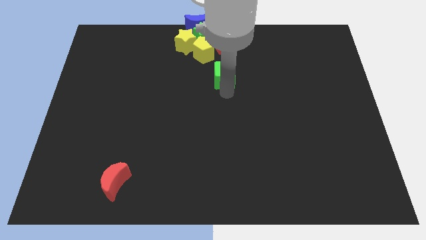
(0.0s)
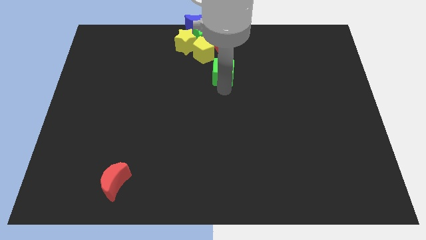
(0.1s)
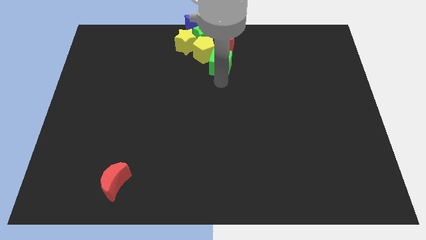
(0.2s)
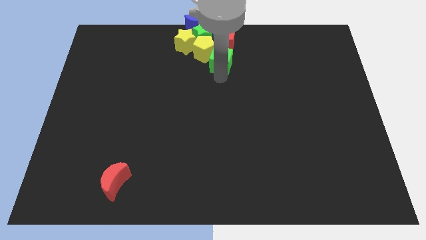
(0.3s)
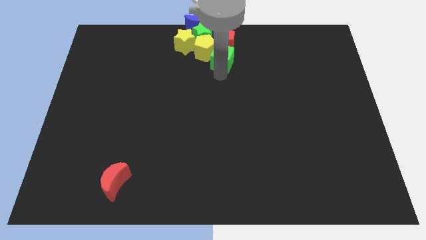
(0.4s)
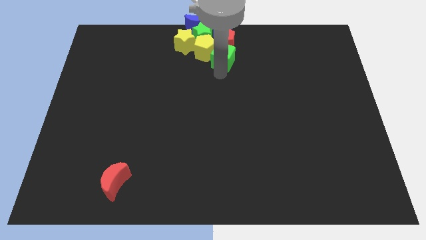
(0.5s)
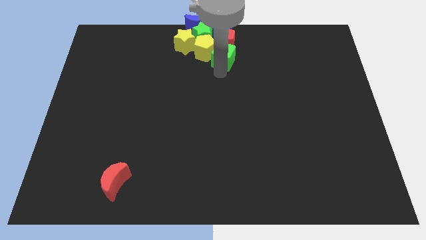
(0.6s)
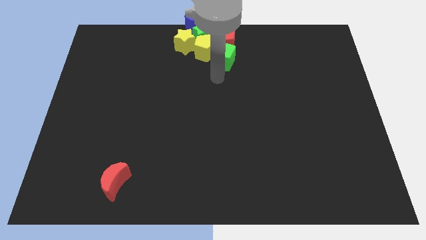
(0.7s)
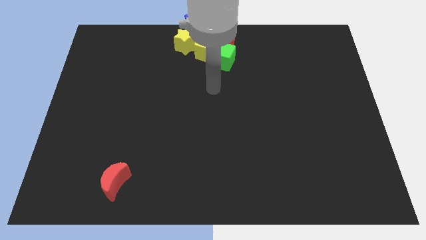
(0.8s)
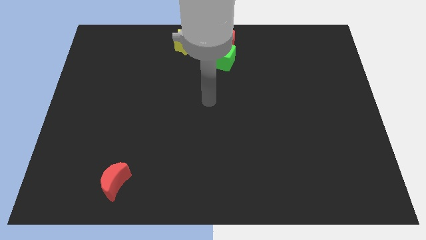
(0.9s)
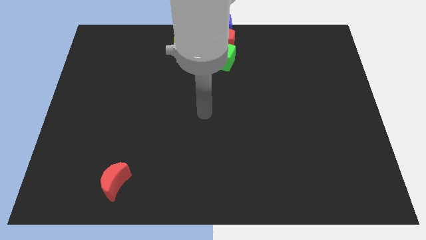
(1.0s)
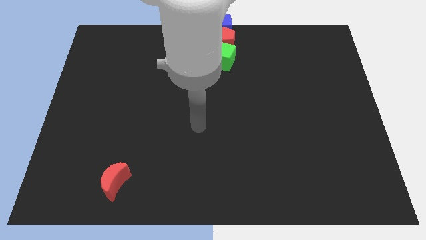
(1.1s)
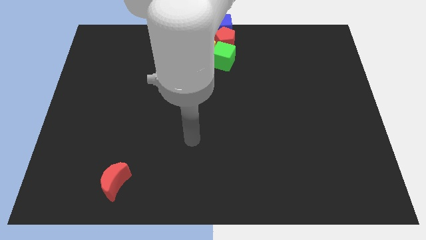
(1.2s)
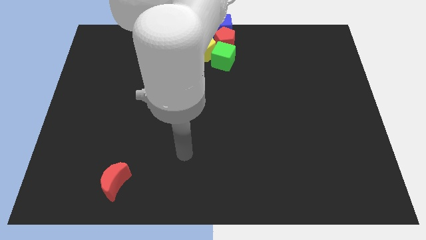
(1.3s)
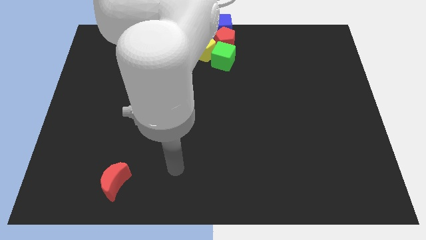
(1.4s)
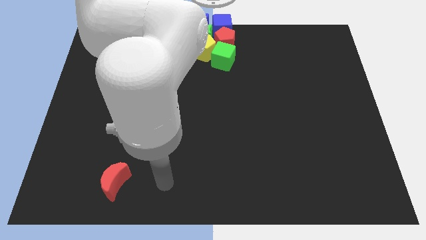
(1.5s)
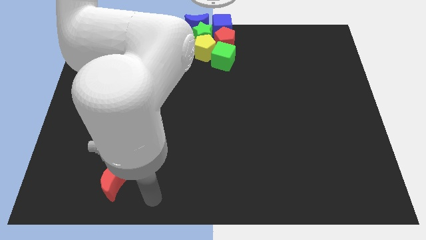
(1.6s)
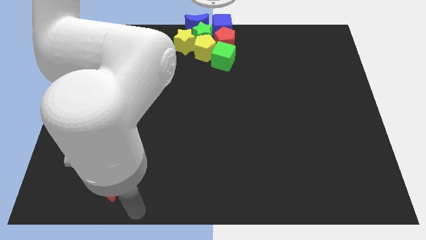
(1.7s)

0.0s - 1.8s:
move the green cube into the yellow pentagon

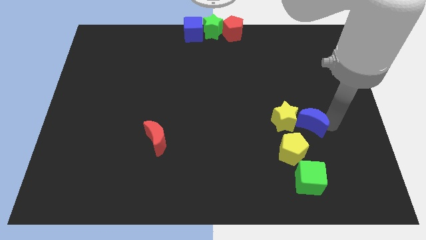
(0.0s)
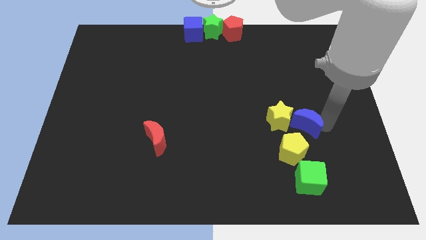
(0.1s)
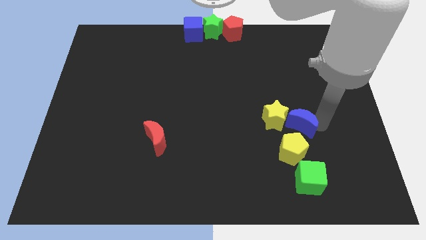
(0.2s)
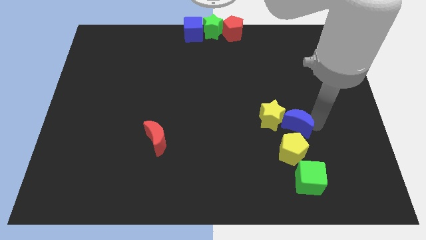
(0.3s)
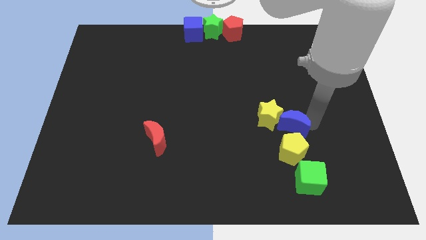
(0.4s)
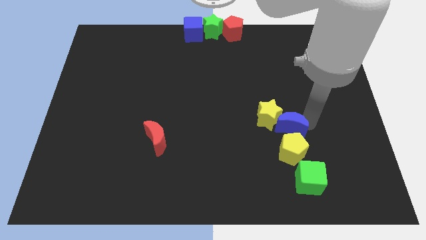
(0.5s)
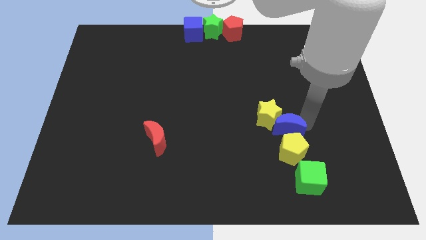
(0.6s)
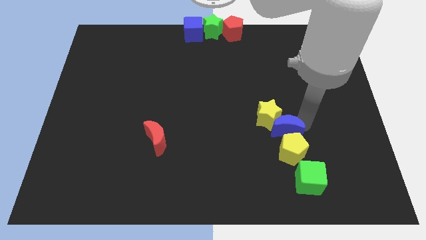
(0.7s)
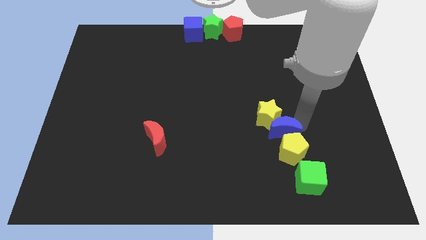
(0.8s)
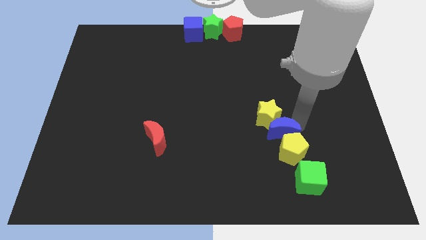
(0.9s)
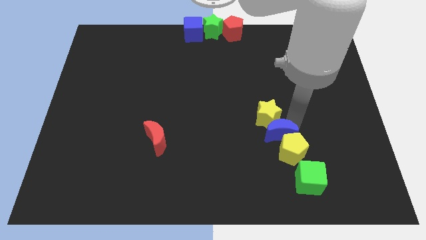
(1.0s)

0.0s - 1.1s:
place the blue moon in between the yellow blocks

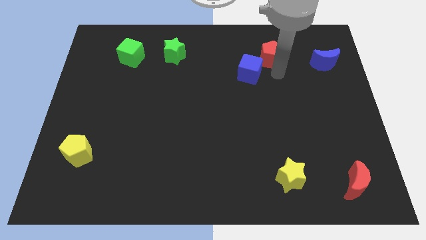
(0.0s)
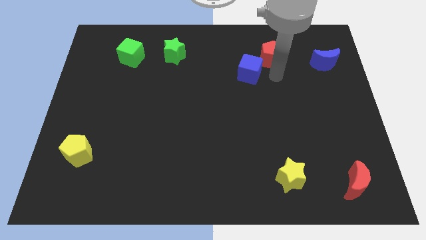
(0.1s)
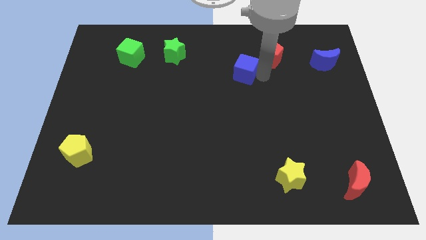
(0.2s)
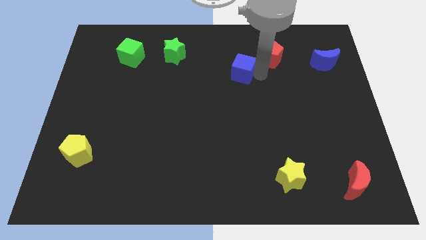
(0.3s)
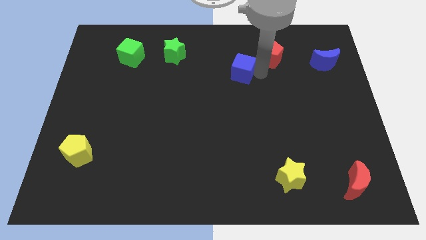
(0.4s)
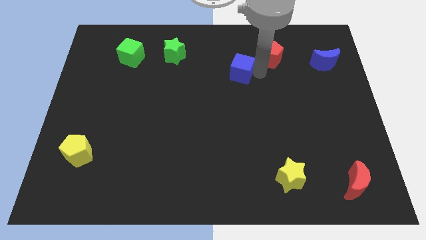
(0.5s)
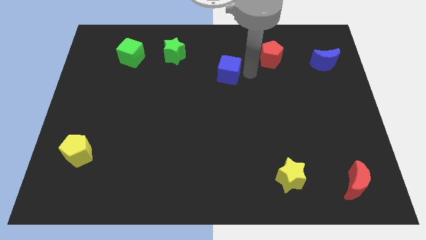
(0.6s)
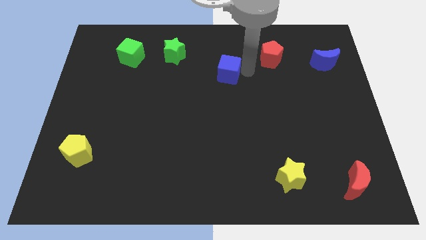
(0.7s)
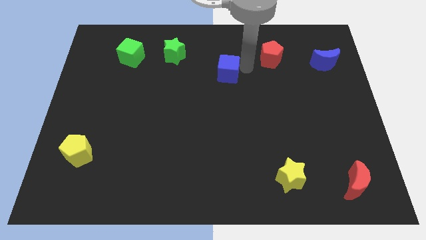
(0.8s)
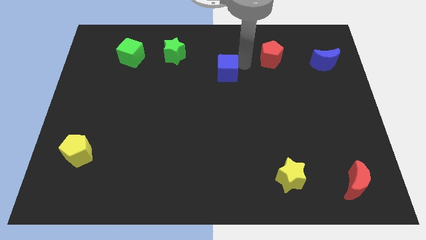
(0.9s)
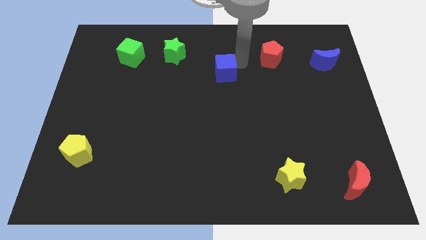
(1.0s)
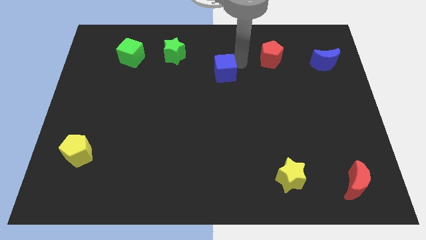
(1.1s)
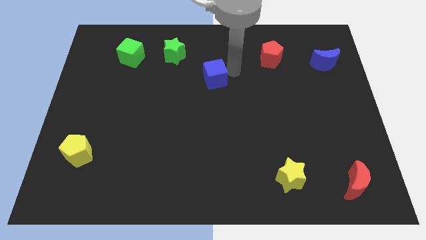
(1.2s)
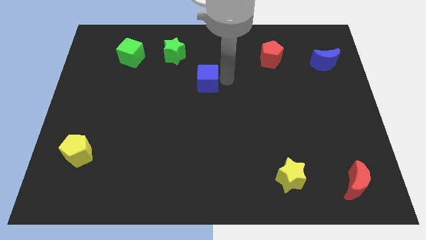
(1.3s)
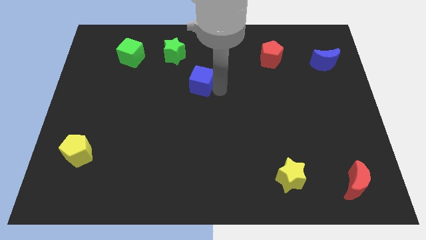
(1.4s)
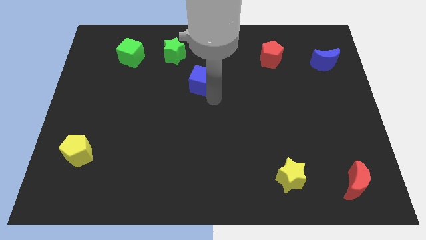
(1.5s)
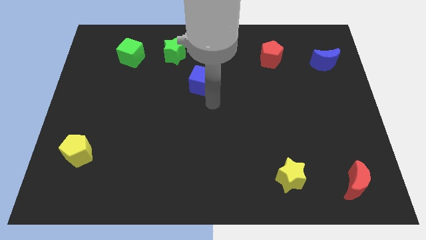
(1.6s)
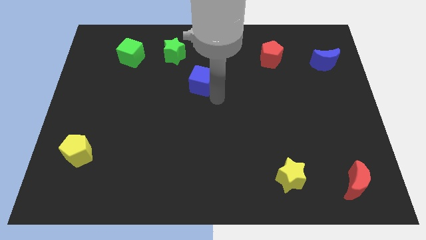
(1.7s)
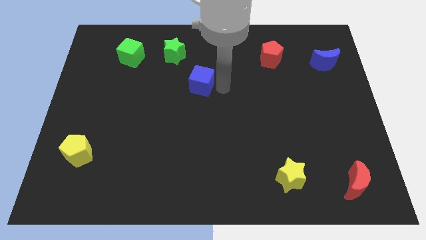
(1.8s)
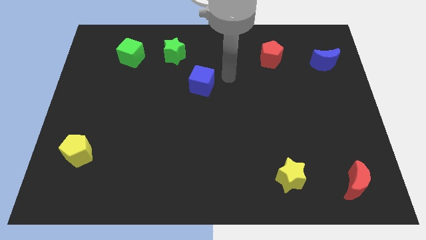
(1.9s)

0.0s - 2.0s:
move the blue cube to the left side slightly

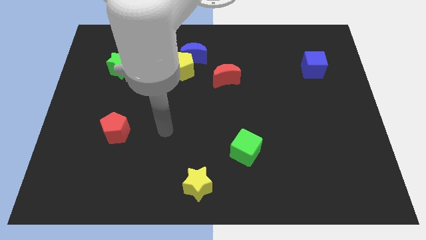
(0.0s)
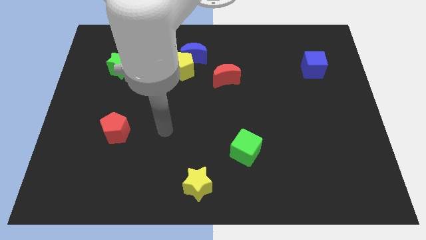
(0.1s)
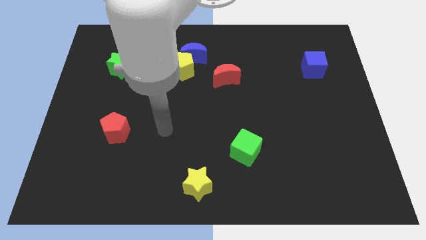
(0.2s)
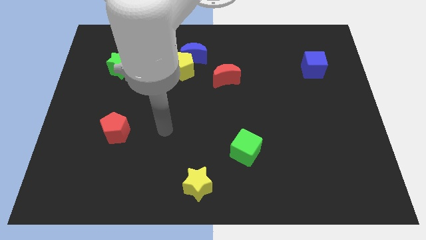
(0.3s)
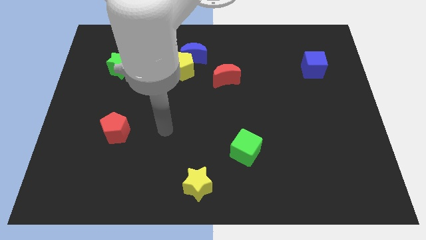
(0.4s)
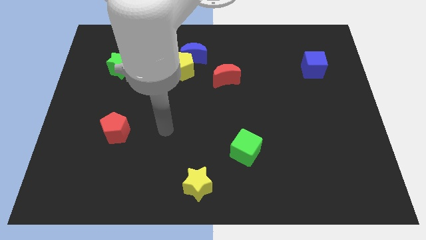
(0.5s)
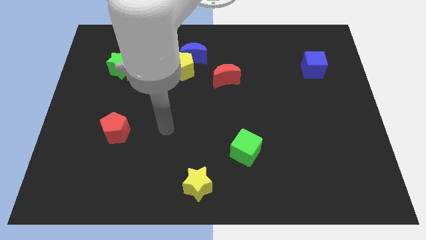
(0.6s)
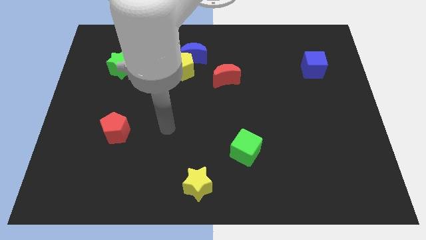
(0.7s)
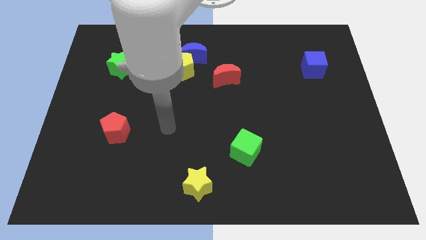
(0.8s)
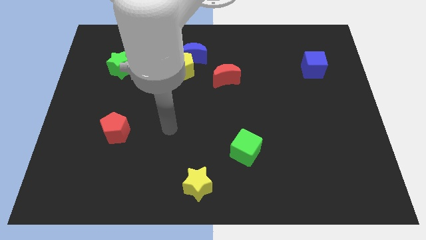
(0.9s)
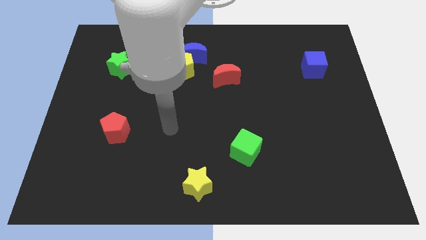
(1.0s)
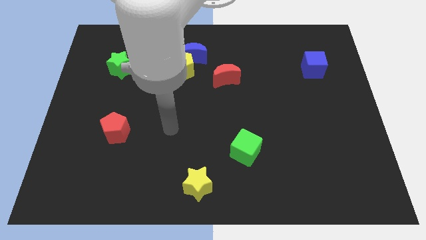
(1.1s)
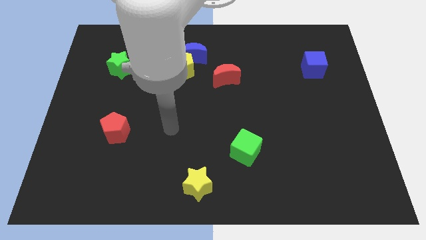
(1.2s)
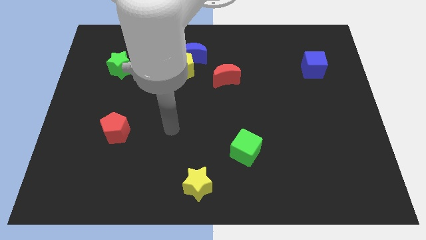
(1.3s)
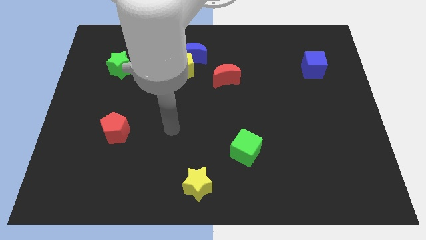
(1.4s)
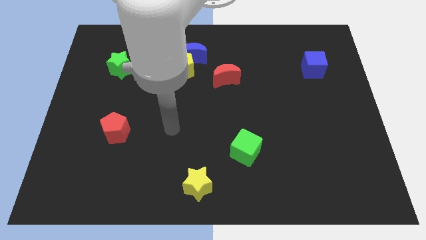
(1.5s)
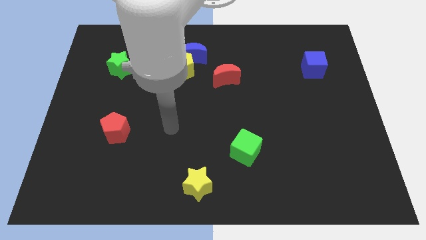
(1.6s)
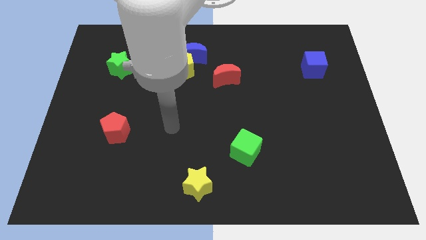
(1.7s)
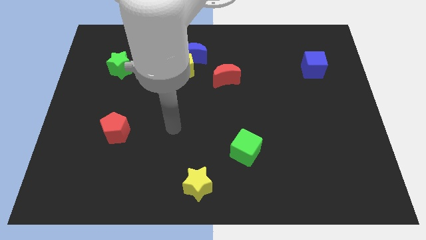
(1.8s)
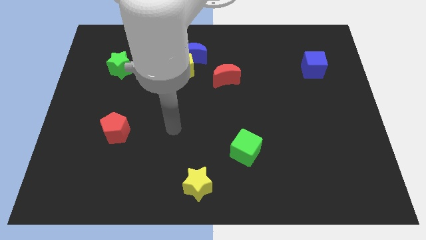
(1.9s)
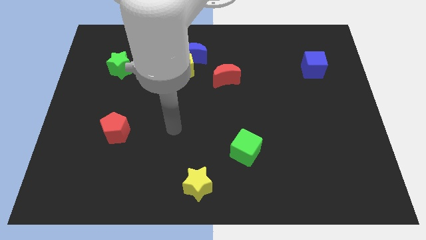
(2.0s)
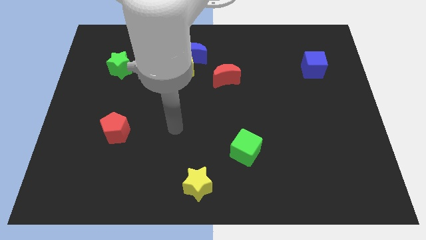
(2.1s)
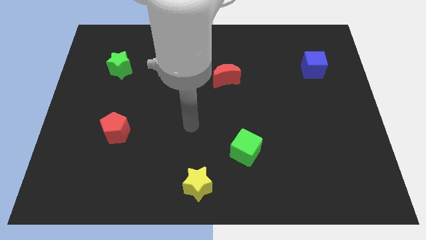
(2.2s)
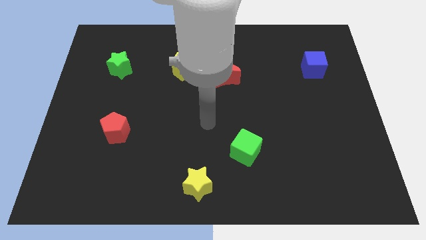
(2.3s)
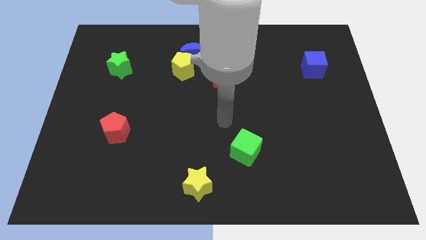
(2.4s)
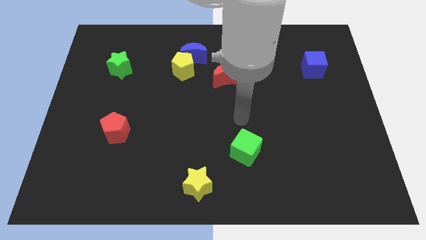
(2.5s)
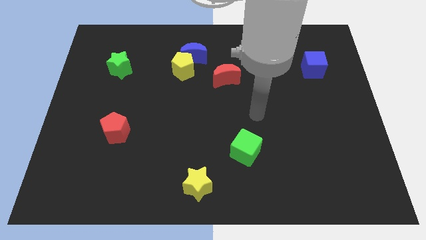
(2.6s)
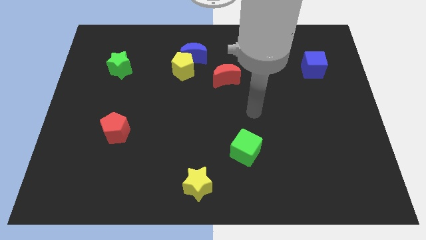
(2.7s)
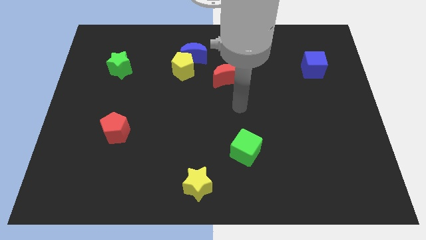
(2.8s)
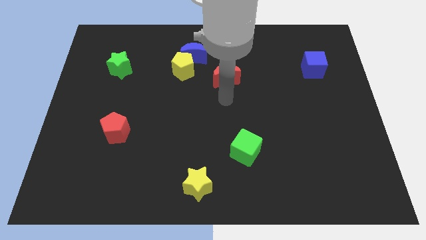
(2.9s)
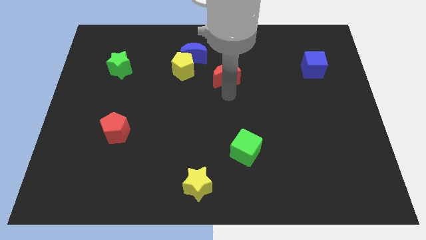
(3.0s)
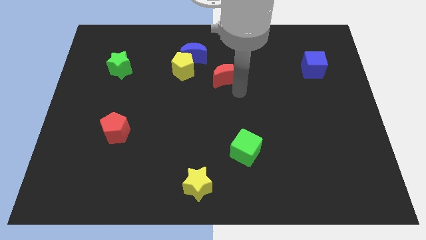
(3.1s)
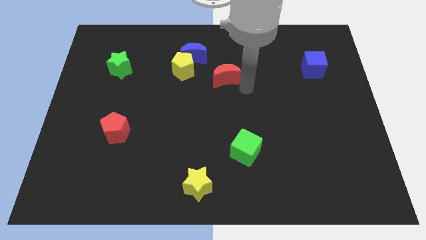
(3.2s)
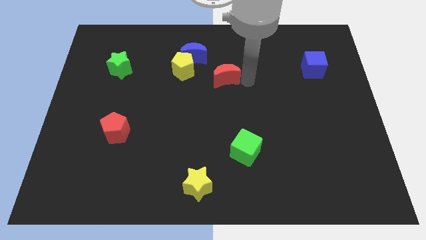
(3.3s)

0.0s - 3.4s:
place the arm right side of the red crescent

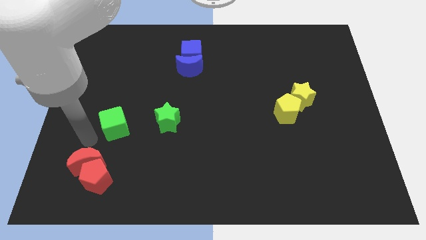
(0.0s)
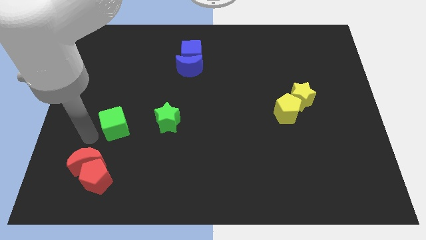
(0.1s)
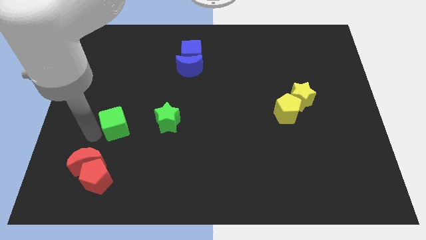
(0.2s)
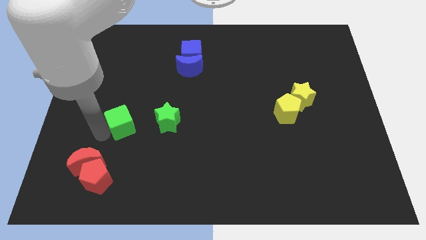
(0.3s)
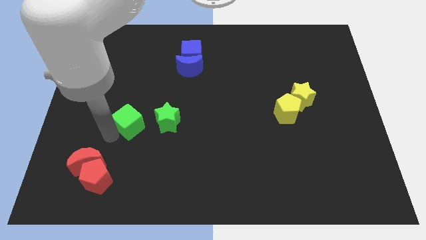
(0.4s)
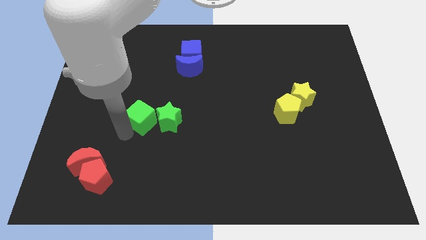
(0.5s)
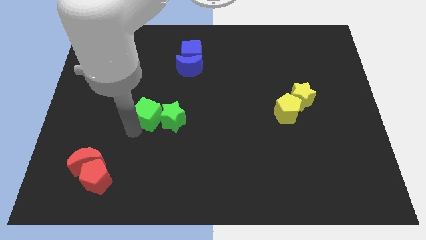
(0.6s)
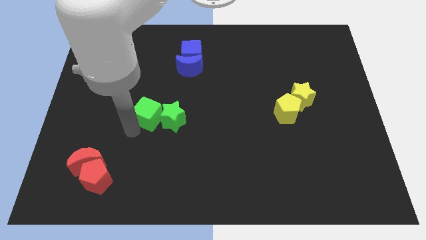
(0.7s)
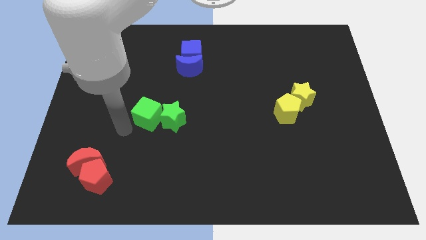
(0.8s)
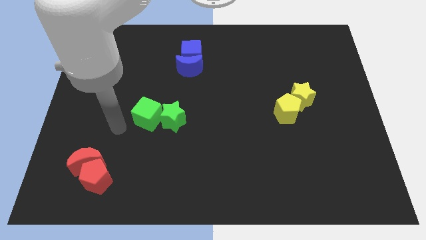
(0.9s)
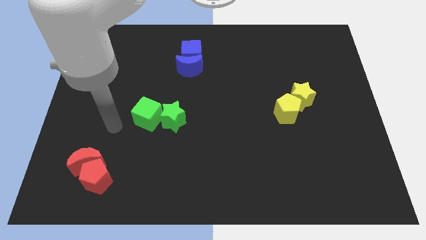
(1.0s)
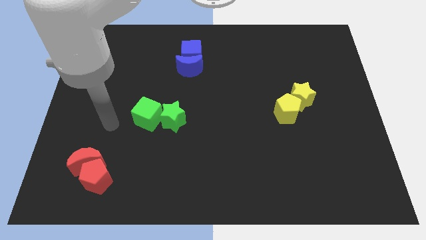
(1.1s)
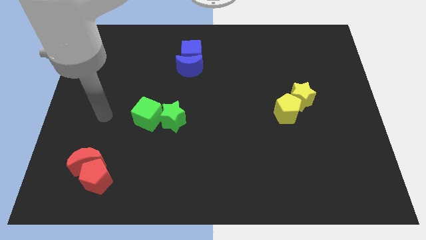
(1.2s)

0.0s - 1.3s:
move green cube in to green star
